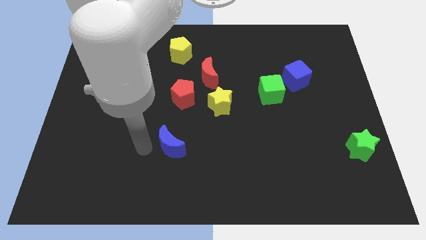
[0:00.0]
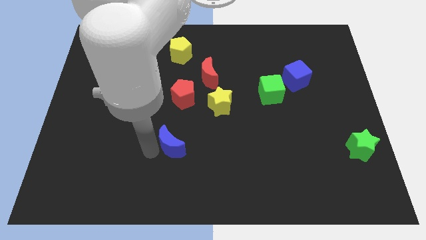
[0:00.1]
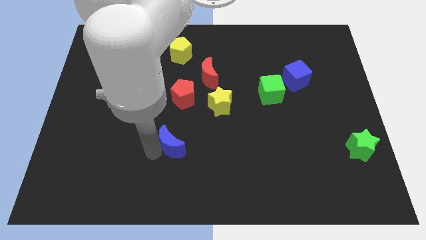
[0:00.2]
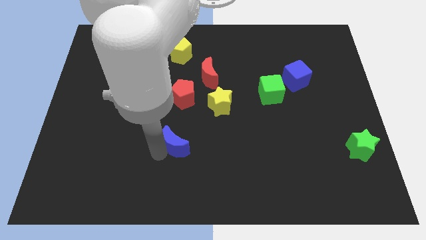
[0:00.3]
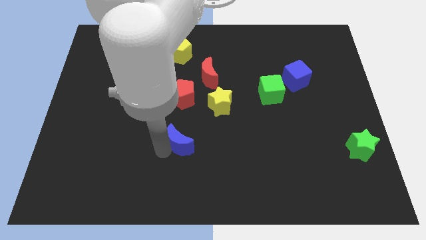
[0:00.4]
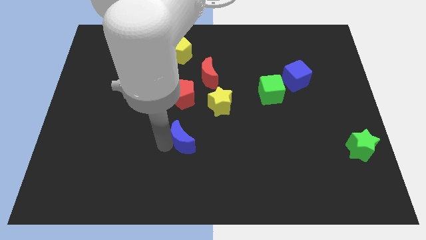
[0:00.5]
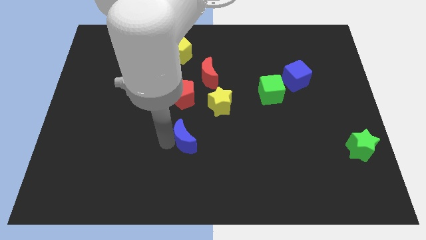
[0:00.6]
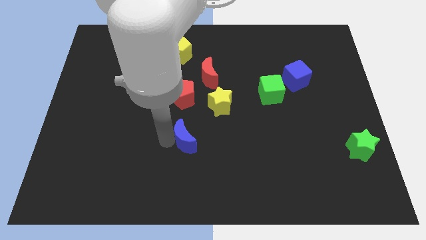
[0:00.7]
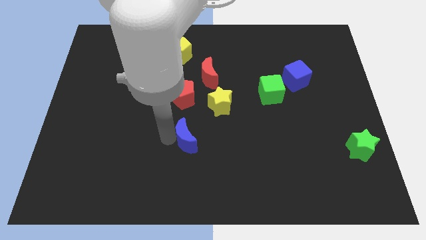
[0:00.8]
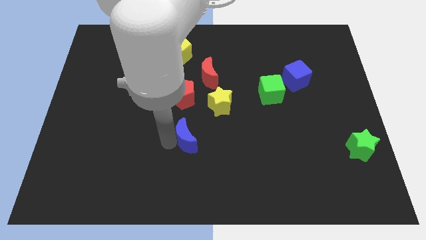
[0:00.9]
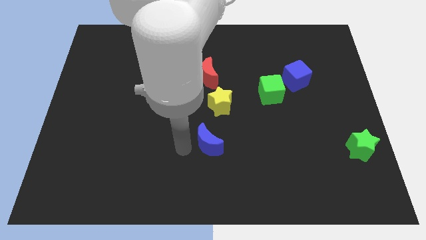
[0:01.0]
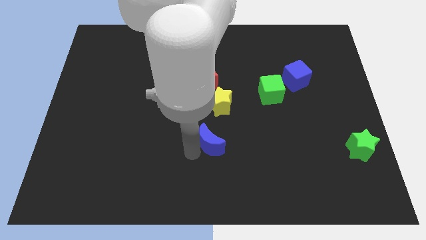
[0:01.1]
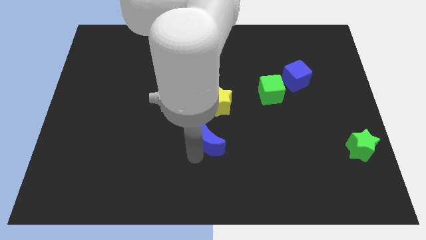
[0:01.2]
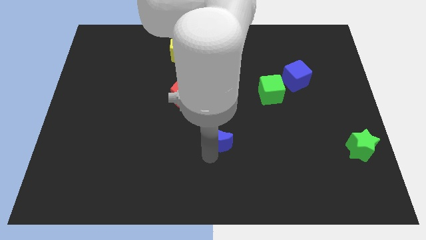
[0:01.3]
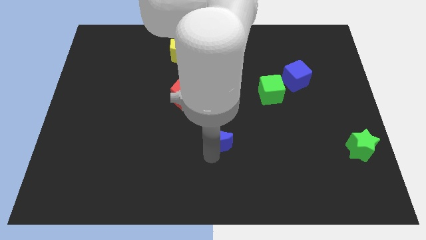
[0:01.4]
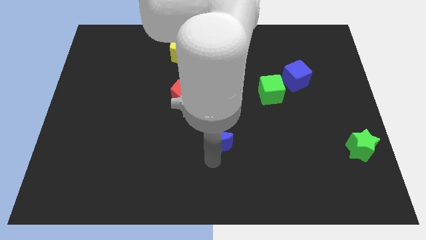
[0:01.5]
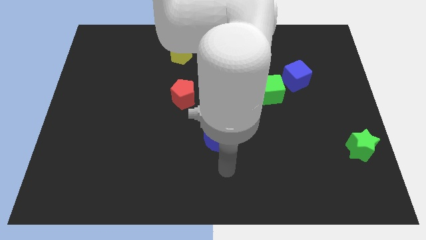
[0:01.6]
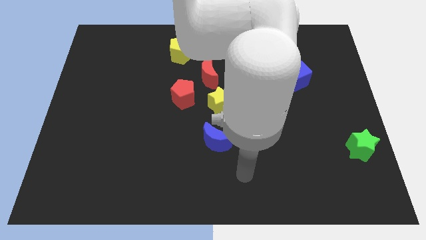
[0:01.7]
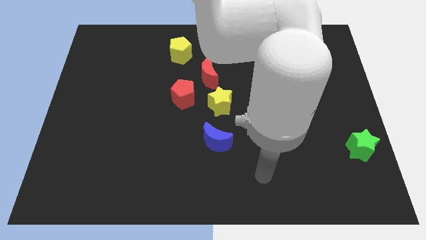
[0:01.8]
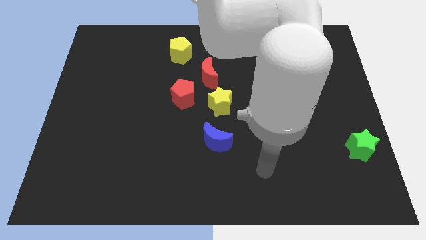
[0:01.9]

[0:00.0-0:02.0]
put the blue moon below the yellow star

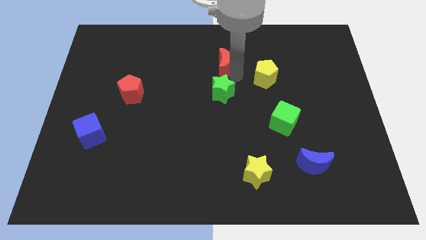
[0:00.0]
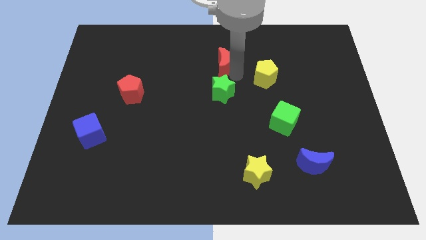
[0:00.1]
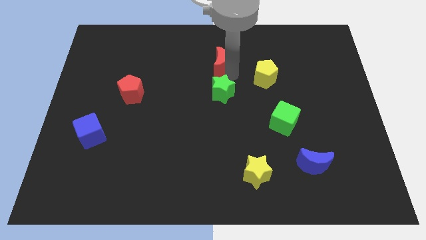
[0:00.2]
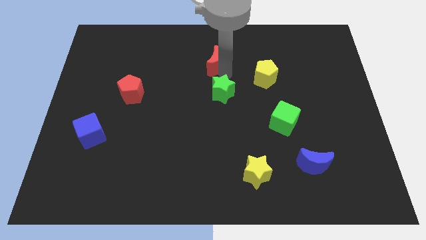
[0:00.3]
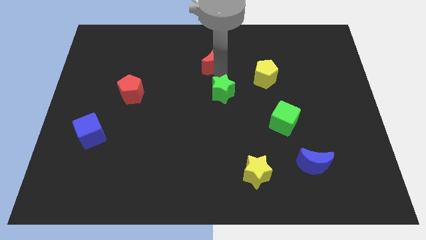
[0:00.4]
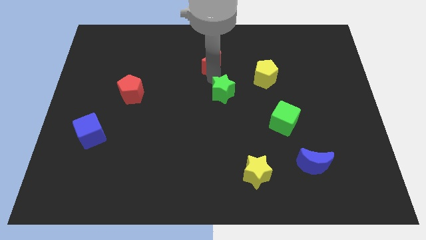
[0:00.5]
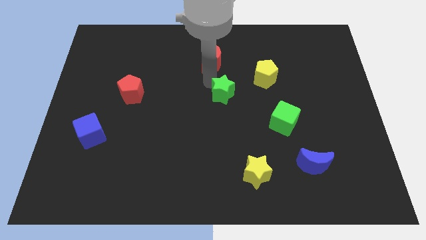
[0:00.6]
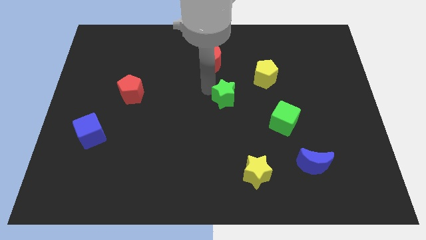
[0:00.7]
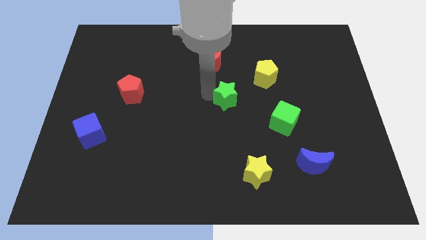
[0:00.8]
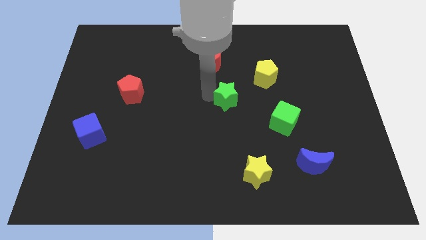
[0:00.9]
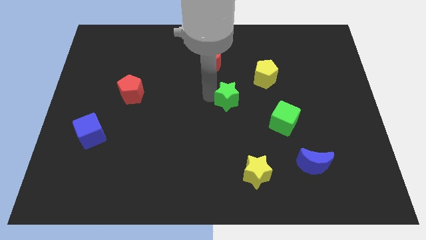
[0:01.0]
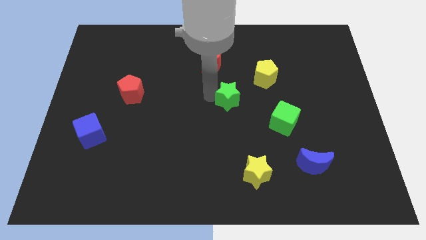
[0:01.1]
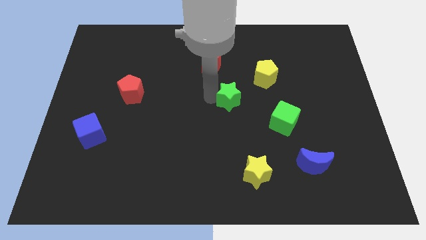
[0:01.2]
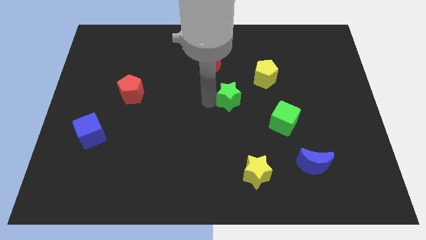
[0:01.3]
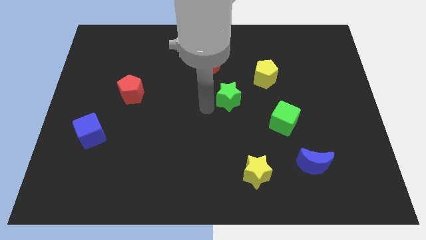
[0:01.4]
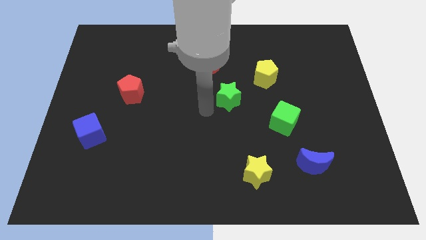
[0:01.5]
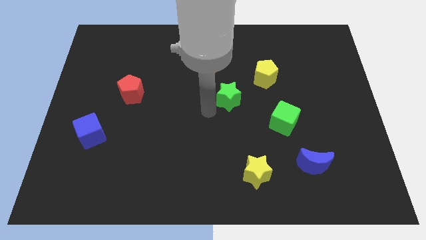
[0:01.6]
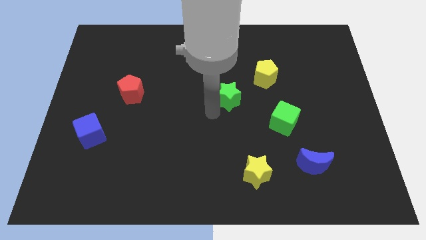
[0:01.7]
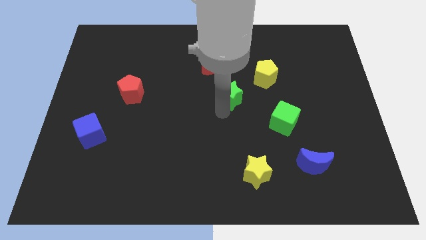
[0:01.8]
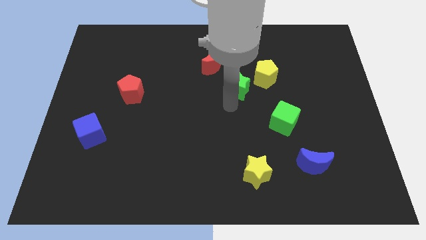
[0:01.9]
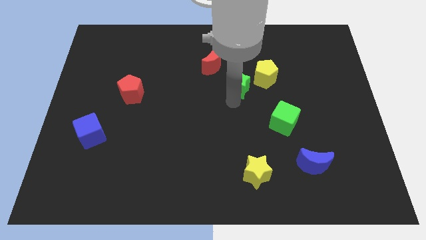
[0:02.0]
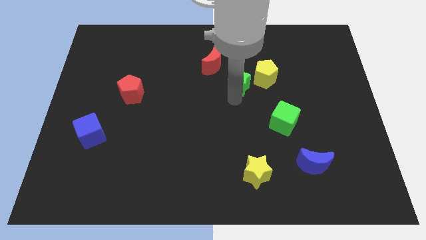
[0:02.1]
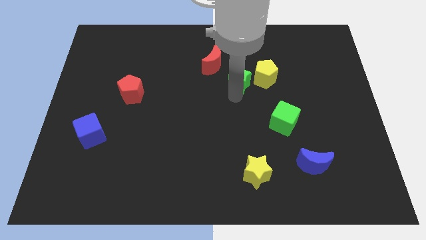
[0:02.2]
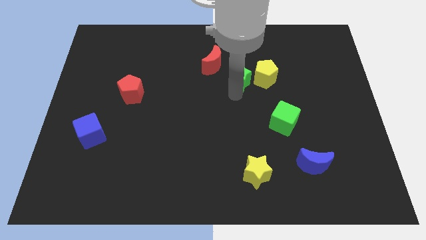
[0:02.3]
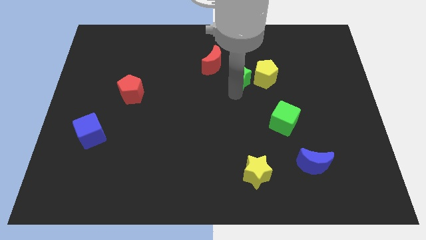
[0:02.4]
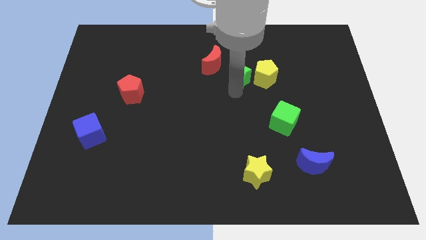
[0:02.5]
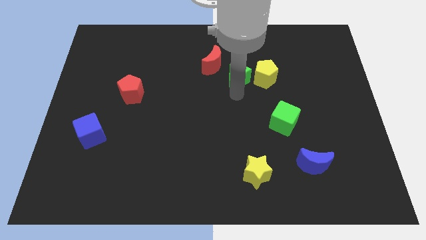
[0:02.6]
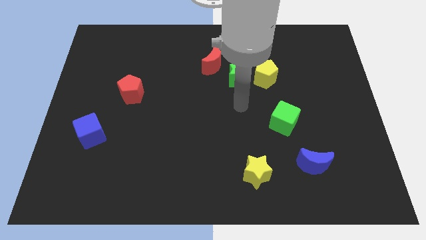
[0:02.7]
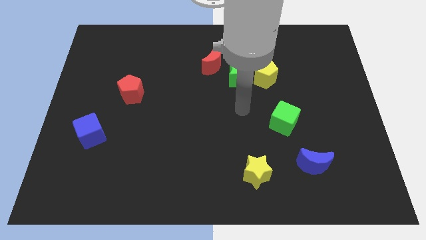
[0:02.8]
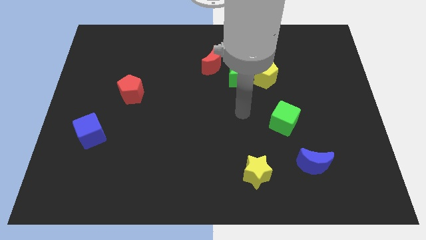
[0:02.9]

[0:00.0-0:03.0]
move the green star at the left side of the yellow pentagon

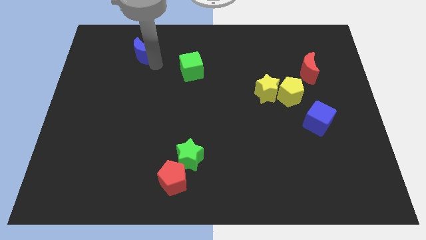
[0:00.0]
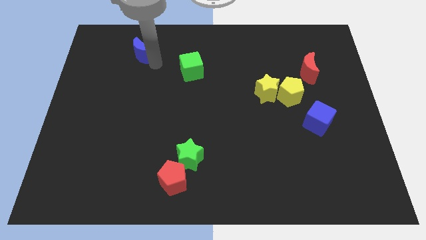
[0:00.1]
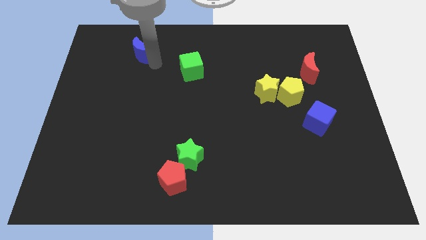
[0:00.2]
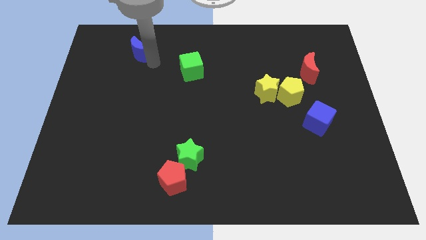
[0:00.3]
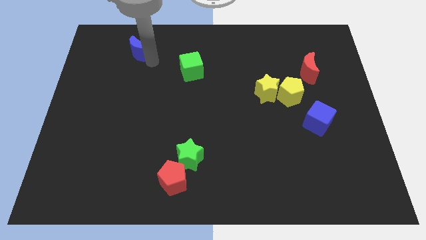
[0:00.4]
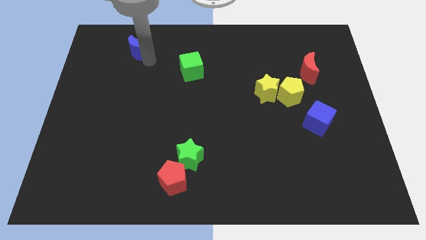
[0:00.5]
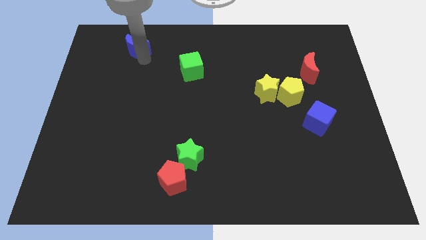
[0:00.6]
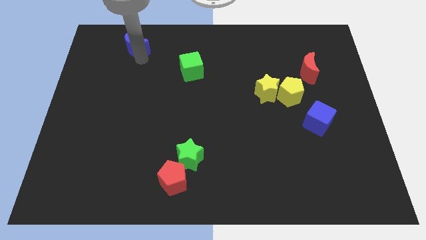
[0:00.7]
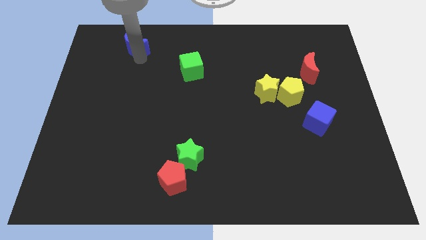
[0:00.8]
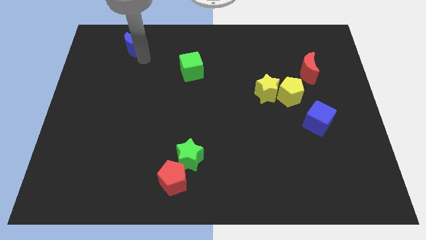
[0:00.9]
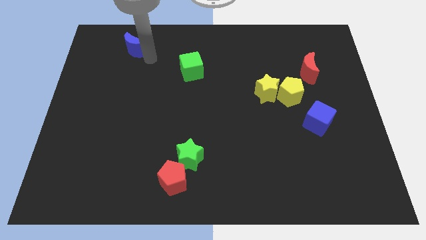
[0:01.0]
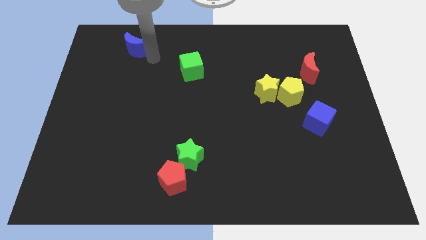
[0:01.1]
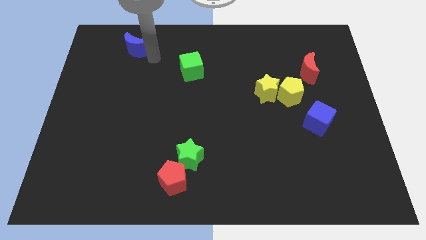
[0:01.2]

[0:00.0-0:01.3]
move the blue moon diagonally towards the top left

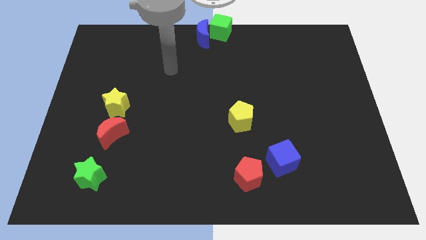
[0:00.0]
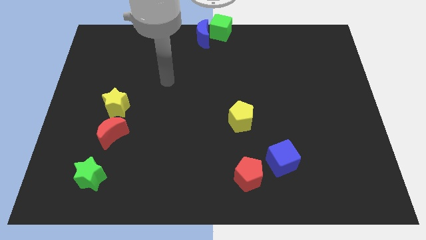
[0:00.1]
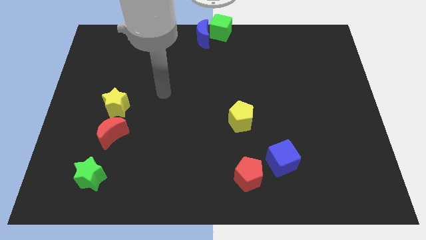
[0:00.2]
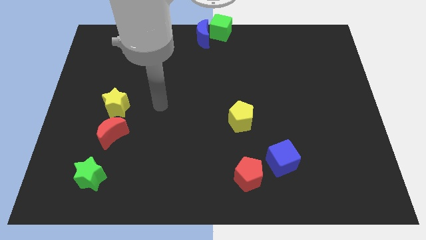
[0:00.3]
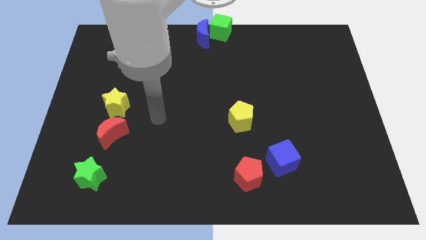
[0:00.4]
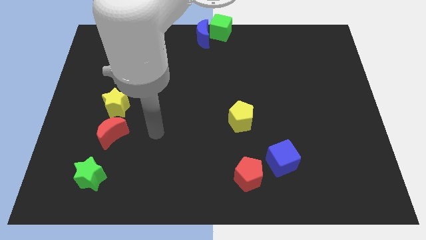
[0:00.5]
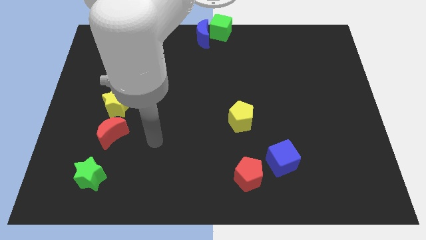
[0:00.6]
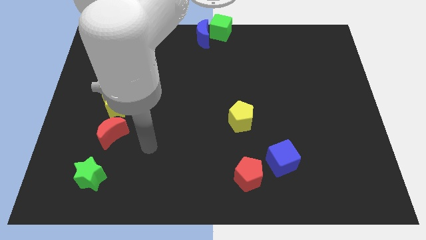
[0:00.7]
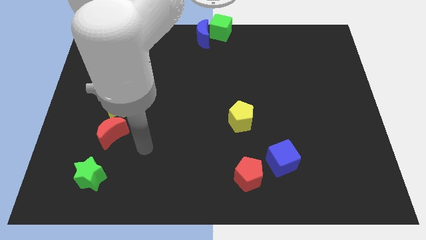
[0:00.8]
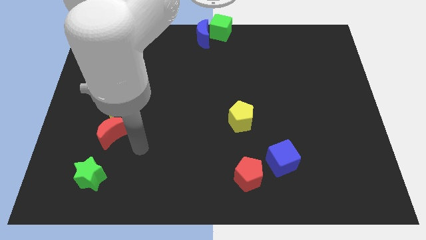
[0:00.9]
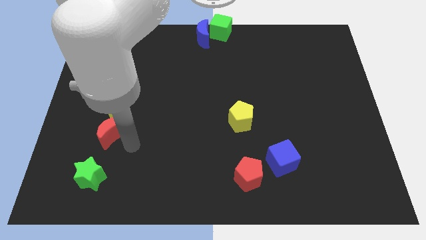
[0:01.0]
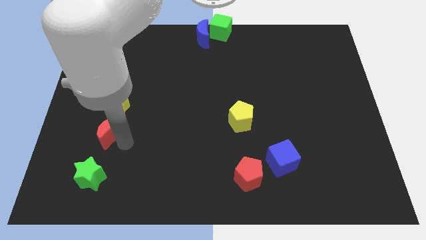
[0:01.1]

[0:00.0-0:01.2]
move the arm towards the bottom of the red crescent

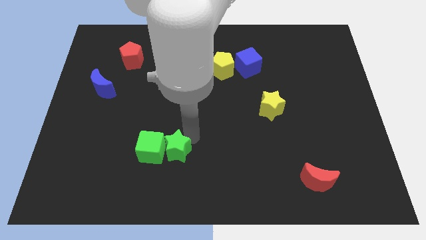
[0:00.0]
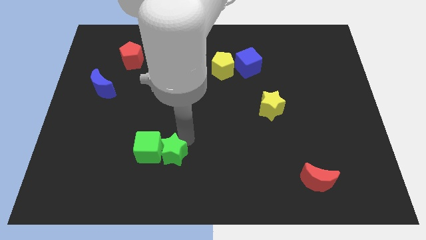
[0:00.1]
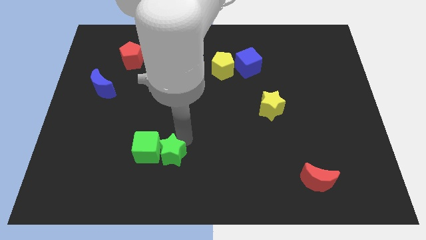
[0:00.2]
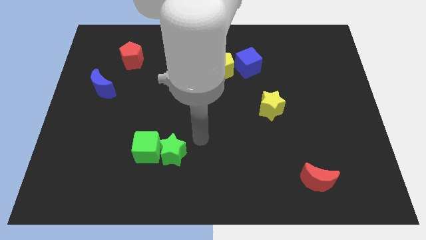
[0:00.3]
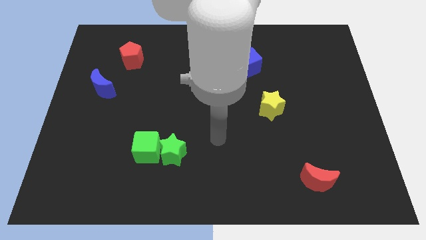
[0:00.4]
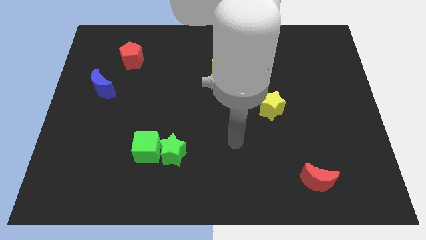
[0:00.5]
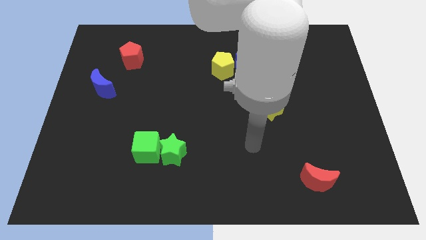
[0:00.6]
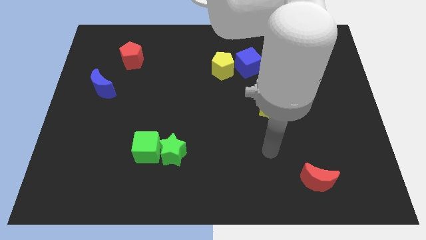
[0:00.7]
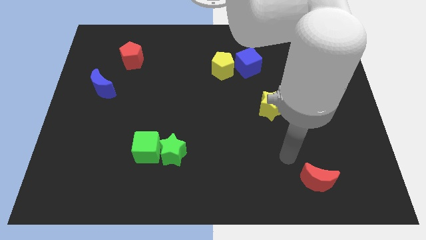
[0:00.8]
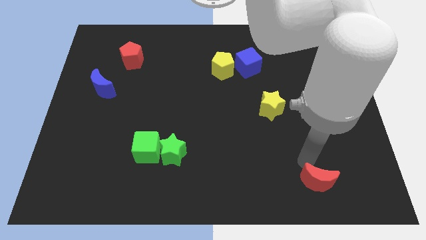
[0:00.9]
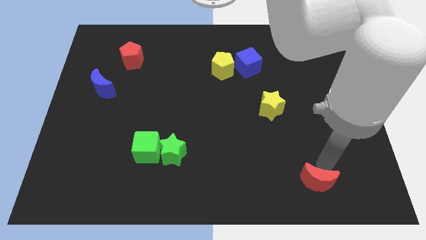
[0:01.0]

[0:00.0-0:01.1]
move your arm towards the red crescent

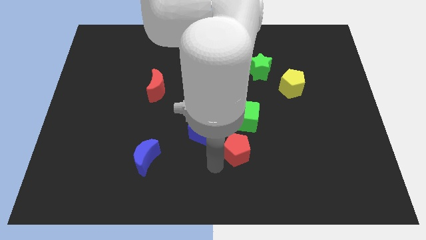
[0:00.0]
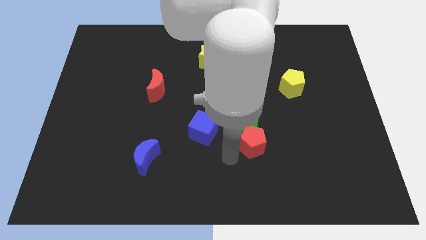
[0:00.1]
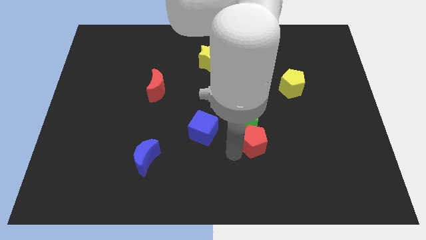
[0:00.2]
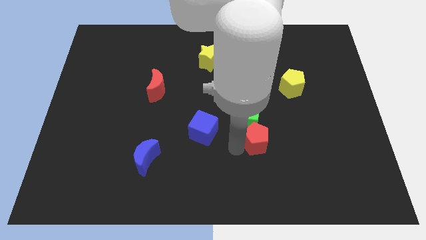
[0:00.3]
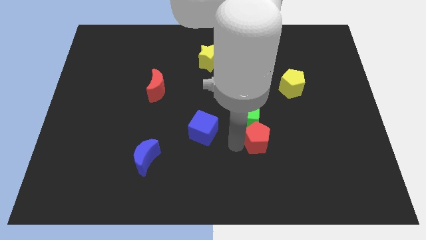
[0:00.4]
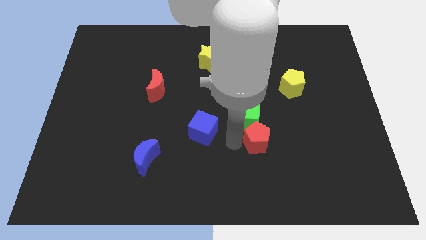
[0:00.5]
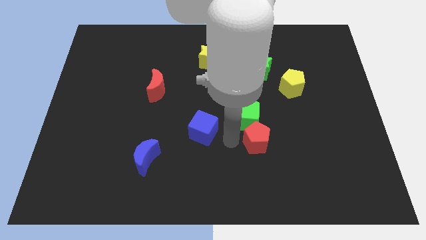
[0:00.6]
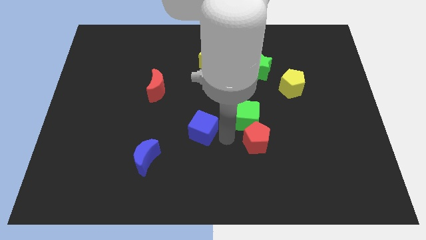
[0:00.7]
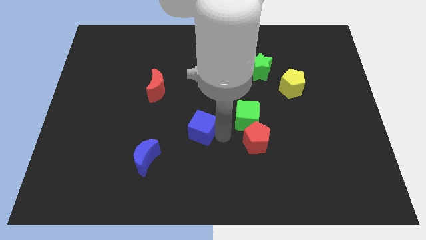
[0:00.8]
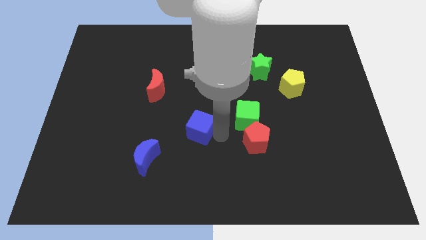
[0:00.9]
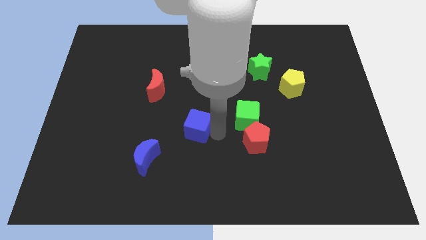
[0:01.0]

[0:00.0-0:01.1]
push the red pentagon into the green cube
